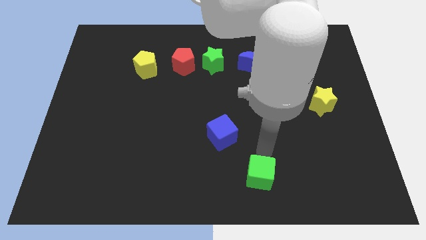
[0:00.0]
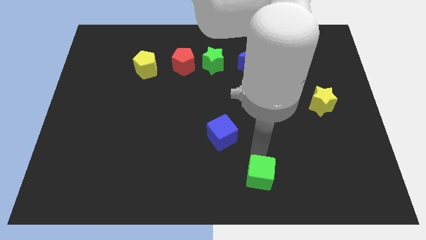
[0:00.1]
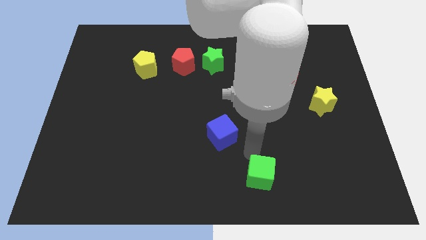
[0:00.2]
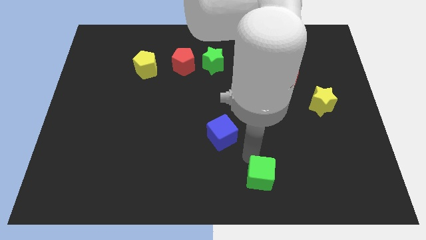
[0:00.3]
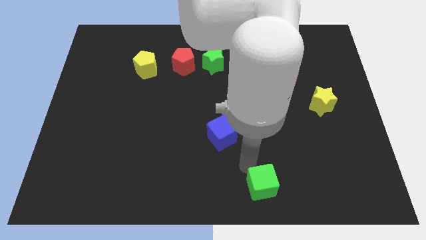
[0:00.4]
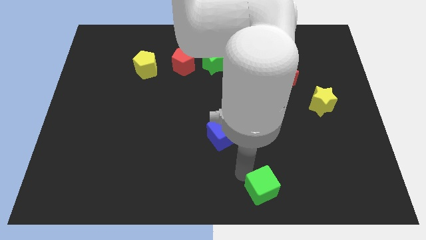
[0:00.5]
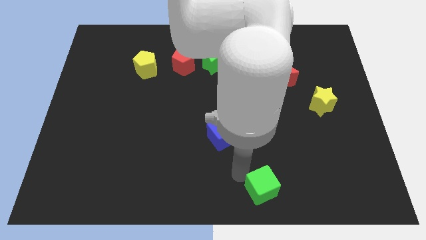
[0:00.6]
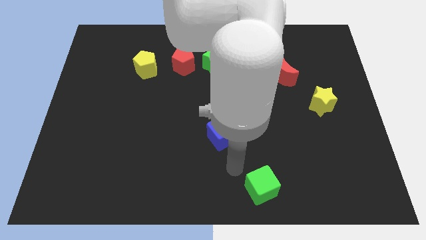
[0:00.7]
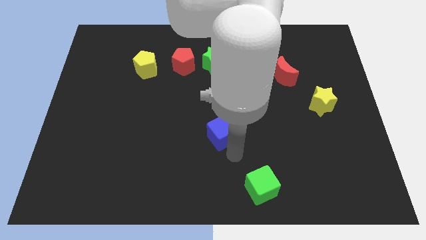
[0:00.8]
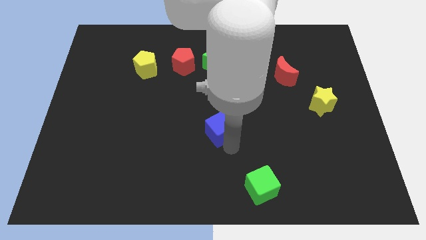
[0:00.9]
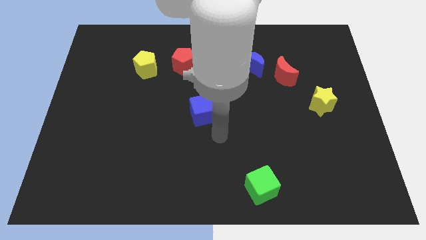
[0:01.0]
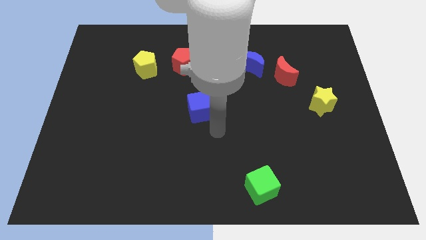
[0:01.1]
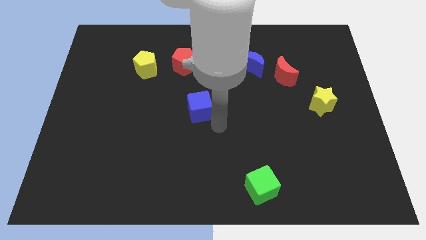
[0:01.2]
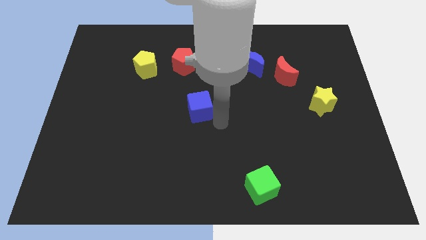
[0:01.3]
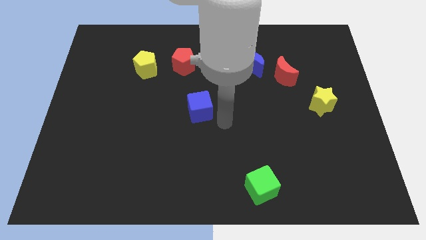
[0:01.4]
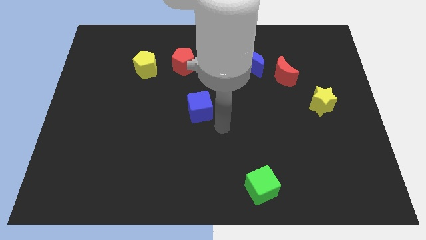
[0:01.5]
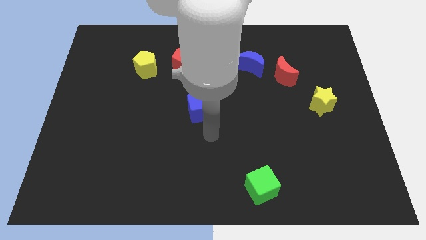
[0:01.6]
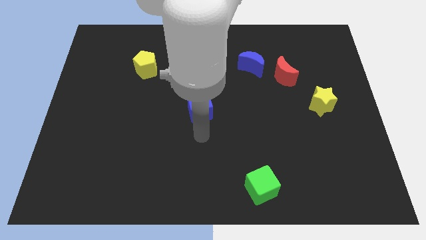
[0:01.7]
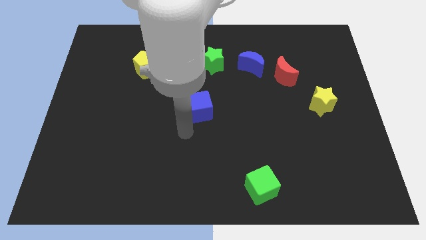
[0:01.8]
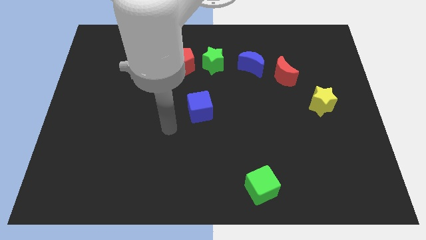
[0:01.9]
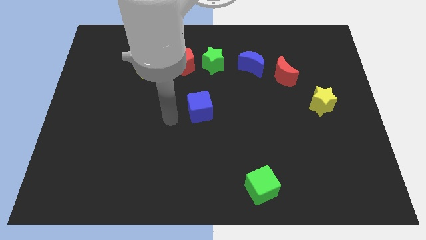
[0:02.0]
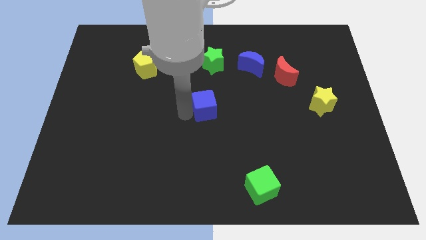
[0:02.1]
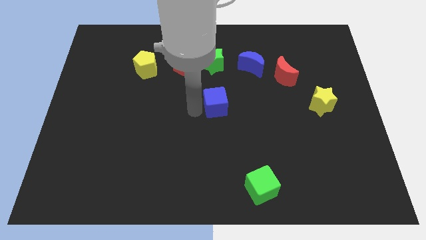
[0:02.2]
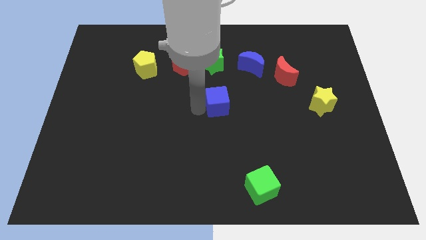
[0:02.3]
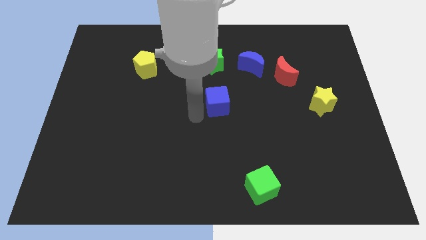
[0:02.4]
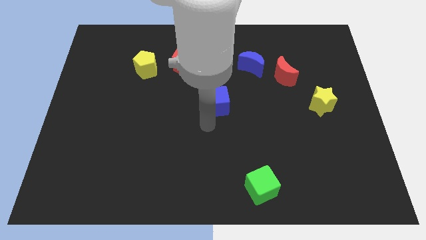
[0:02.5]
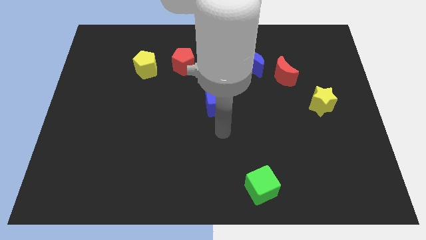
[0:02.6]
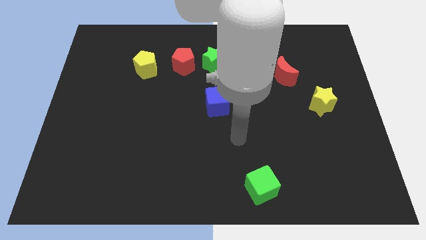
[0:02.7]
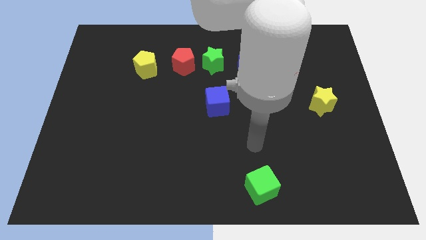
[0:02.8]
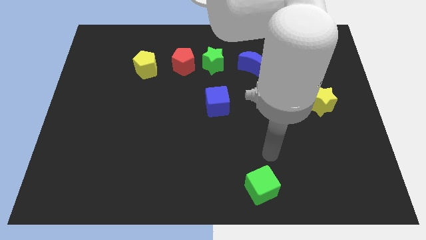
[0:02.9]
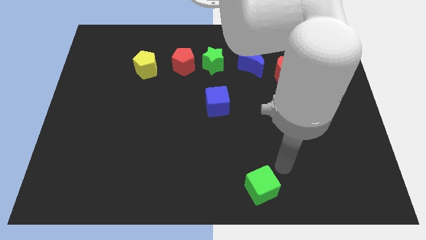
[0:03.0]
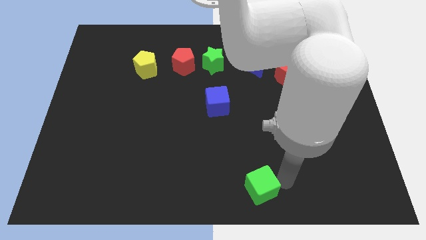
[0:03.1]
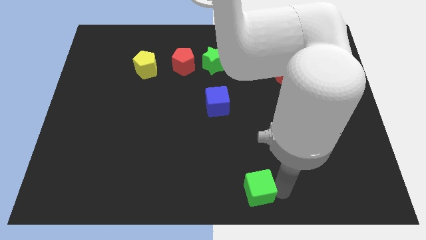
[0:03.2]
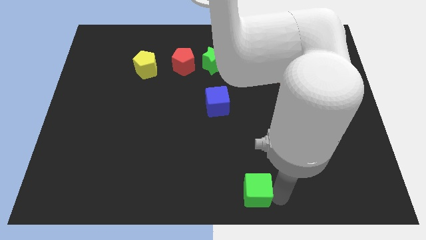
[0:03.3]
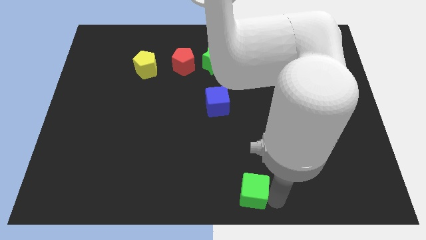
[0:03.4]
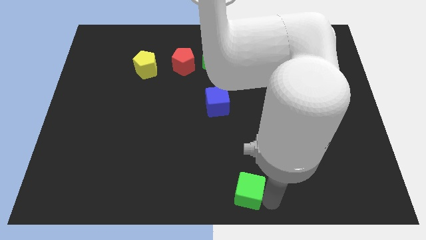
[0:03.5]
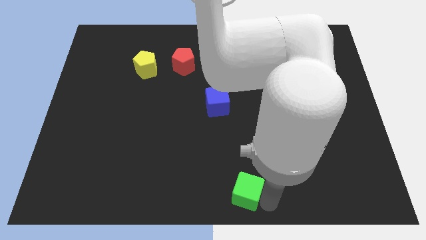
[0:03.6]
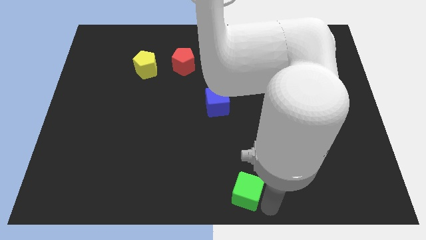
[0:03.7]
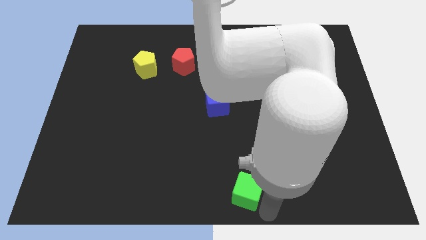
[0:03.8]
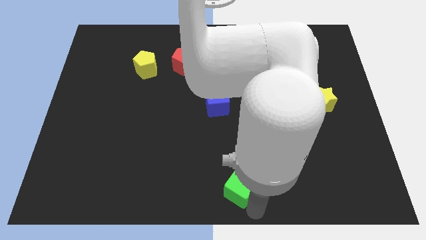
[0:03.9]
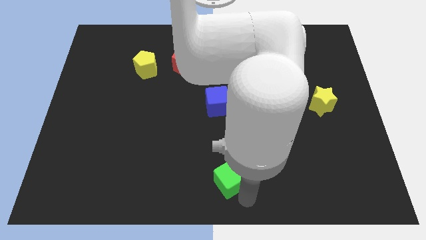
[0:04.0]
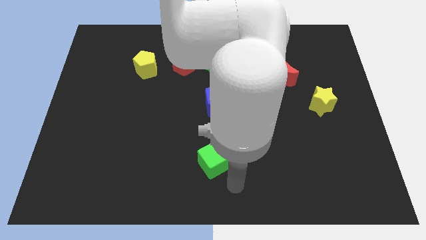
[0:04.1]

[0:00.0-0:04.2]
move the blue cube to the vertically below the green cube

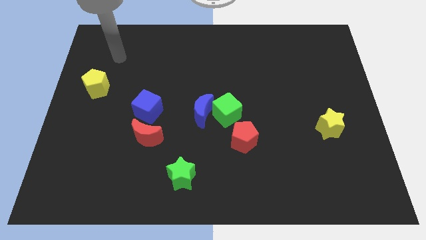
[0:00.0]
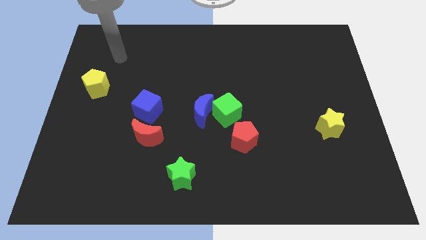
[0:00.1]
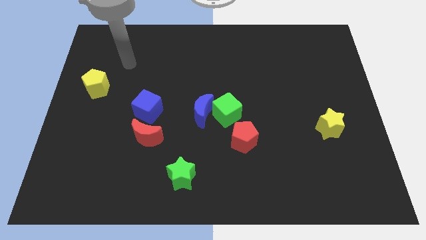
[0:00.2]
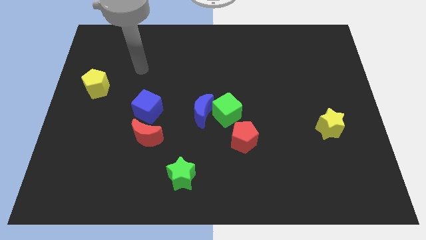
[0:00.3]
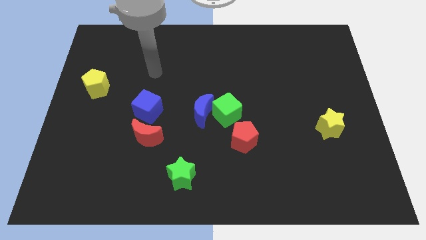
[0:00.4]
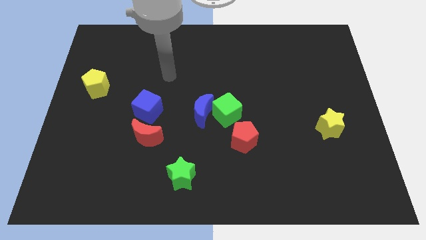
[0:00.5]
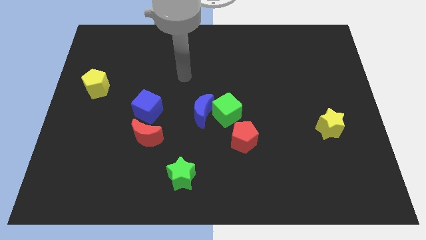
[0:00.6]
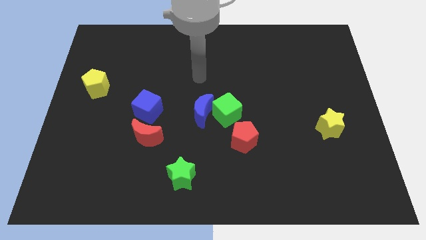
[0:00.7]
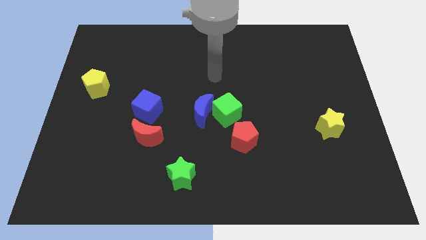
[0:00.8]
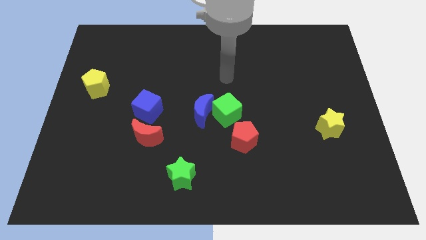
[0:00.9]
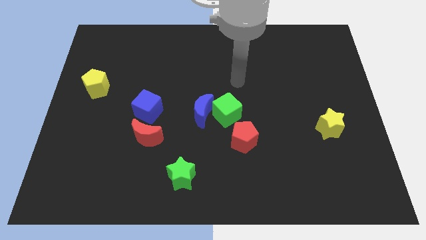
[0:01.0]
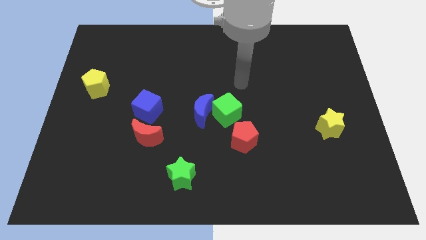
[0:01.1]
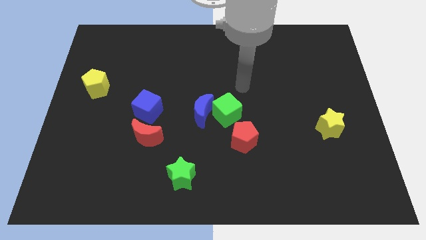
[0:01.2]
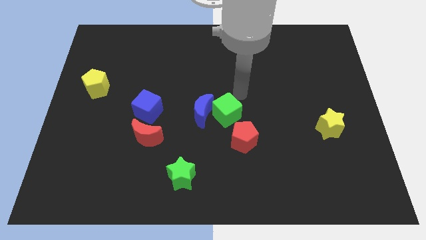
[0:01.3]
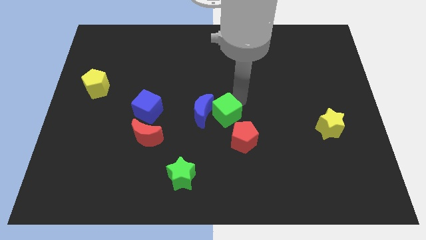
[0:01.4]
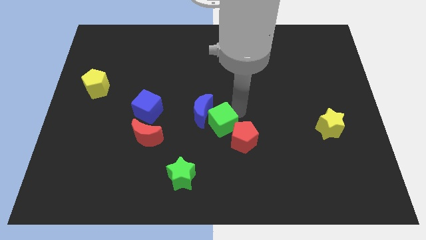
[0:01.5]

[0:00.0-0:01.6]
point your arm at the top right side of green cube

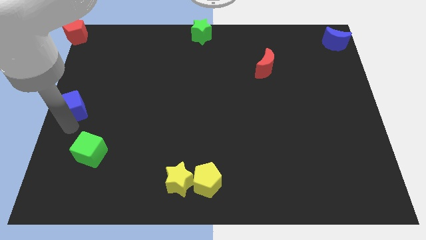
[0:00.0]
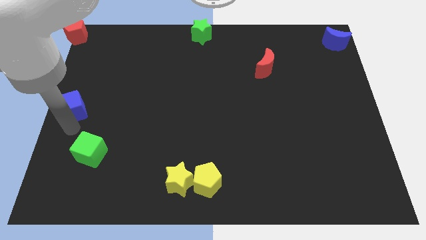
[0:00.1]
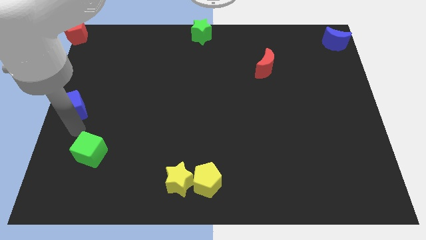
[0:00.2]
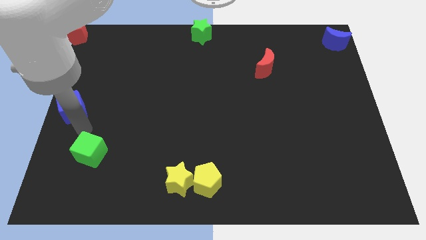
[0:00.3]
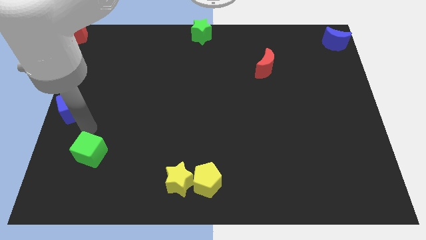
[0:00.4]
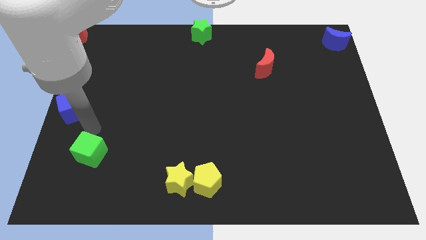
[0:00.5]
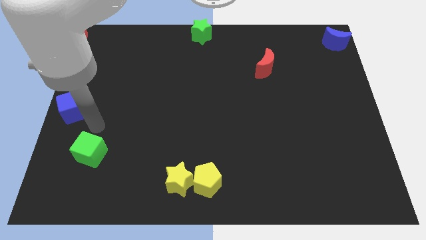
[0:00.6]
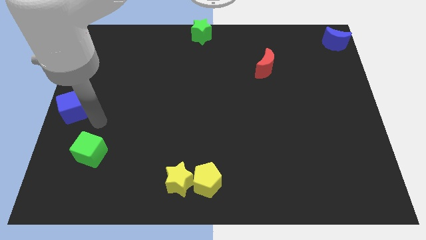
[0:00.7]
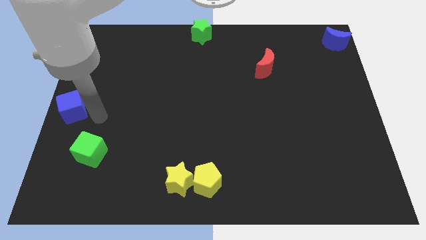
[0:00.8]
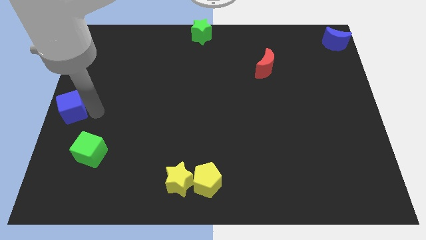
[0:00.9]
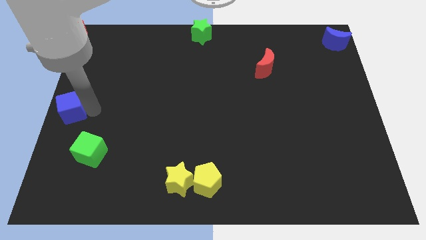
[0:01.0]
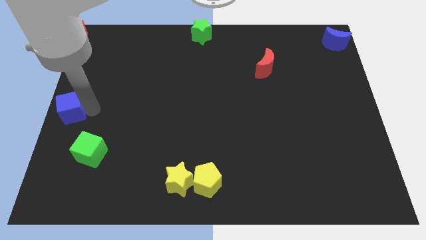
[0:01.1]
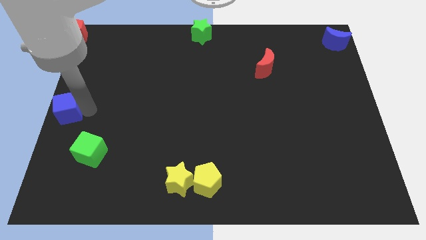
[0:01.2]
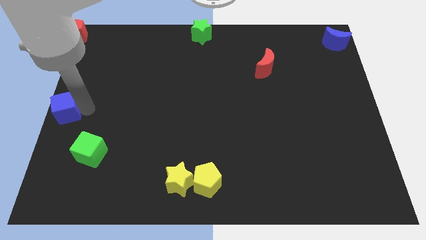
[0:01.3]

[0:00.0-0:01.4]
move the blue cube to the center left

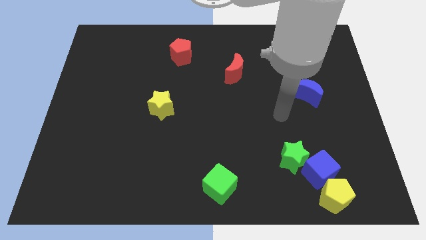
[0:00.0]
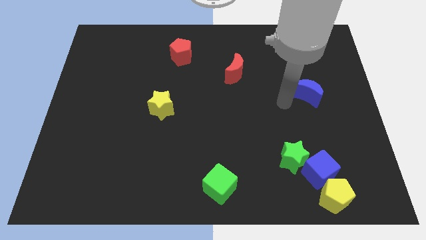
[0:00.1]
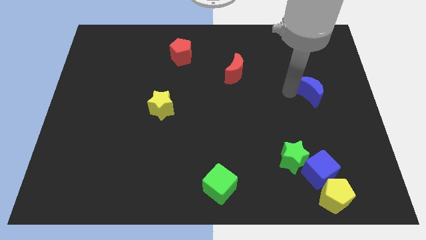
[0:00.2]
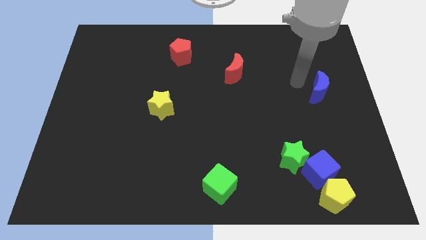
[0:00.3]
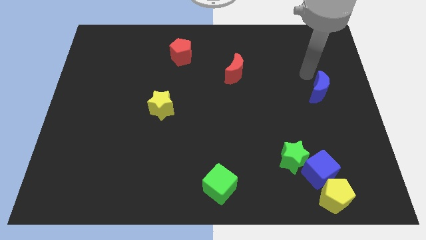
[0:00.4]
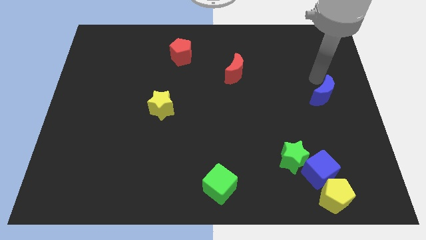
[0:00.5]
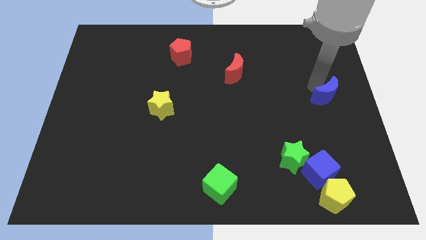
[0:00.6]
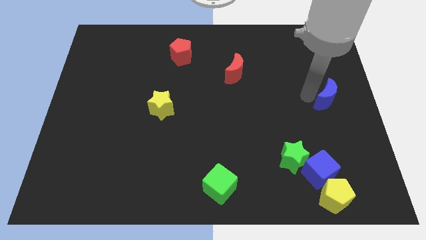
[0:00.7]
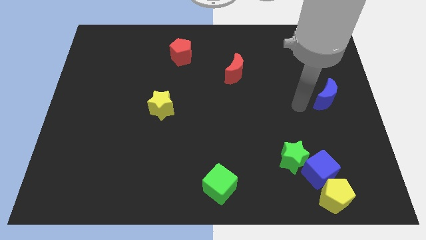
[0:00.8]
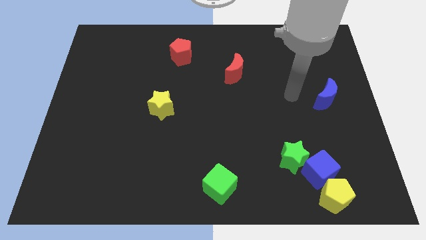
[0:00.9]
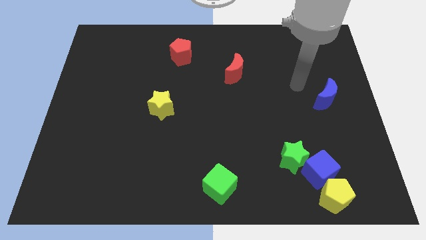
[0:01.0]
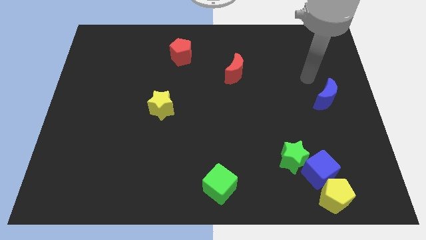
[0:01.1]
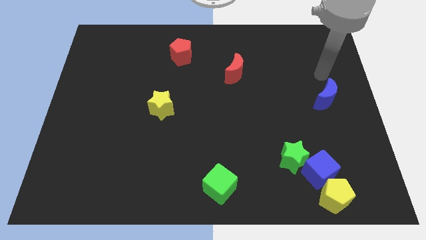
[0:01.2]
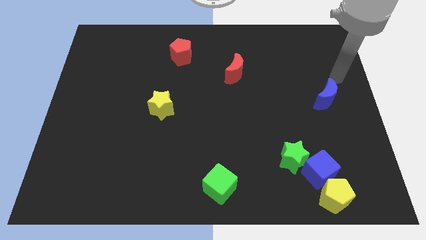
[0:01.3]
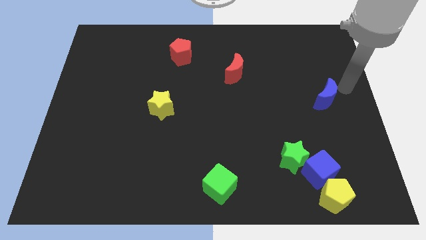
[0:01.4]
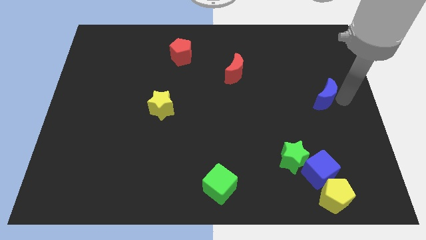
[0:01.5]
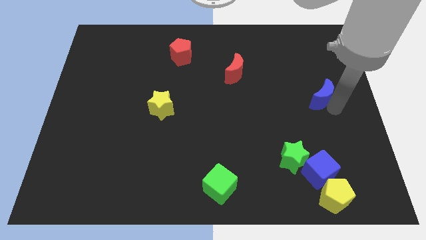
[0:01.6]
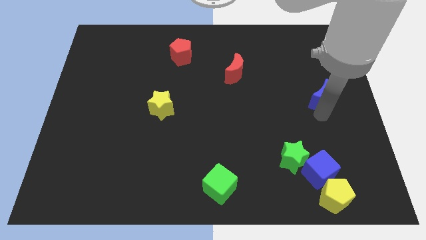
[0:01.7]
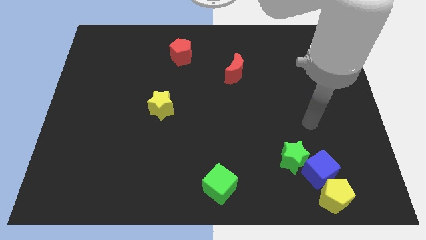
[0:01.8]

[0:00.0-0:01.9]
touch the blue moon
